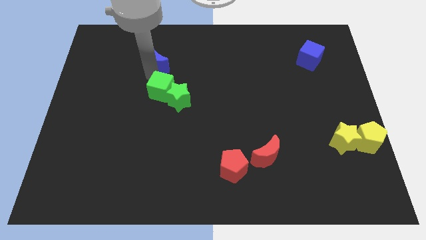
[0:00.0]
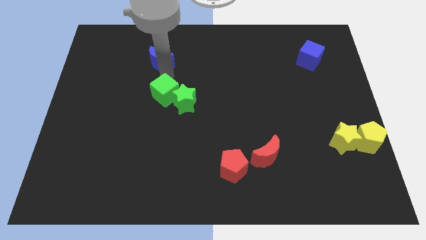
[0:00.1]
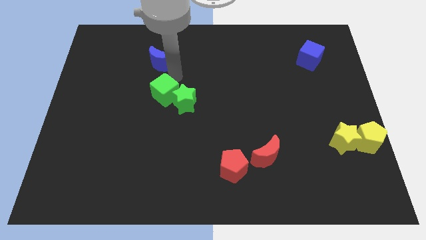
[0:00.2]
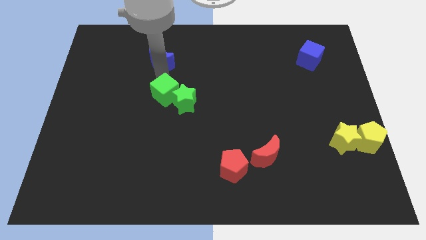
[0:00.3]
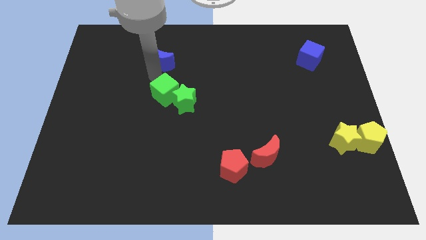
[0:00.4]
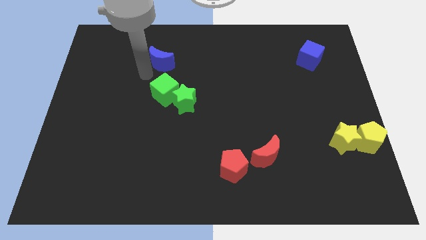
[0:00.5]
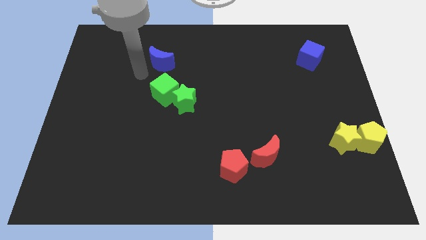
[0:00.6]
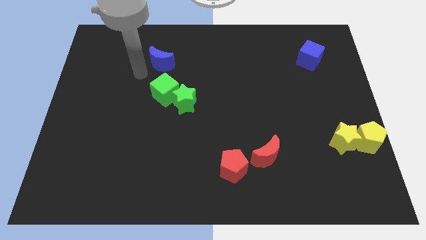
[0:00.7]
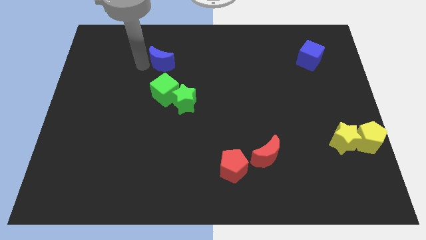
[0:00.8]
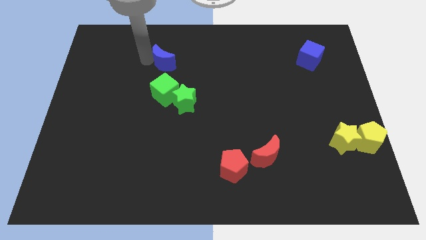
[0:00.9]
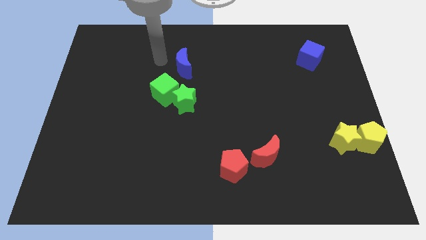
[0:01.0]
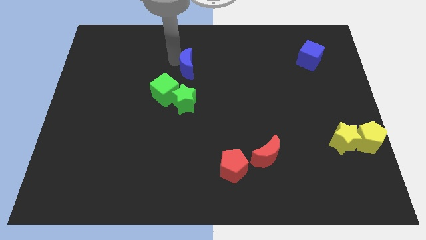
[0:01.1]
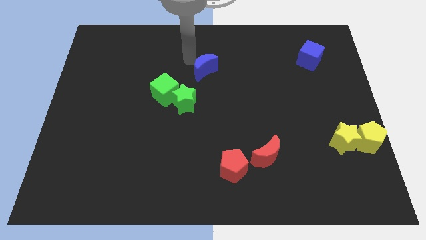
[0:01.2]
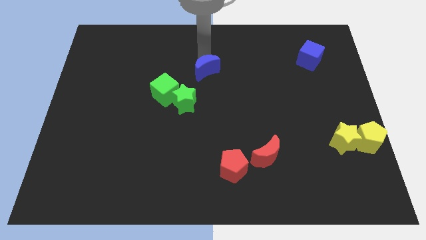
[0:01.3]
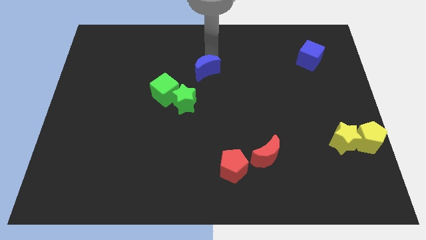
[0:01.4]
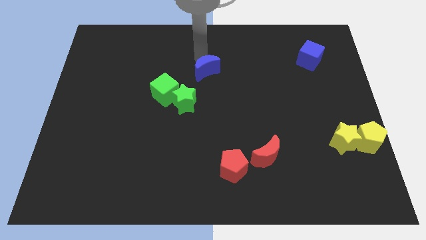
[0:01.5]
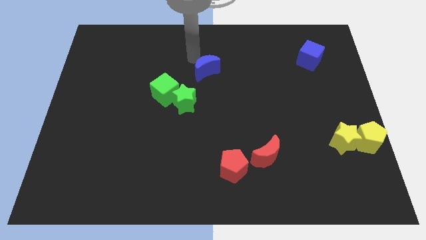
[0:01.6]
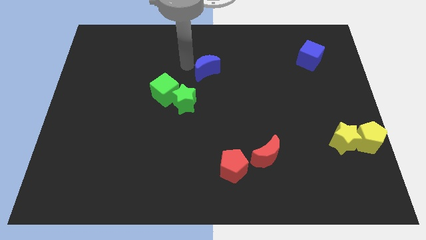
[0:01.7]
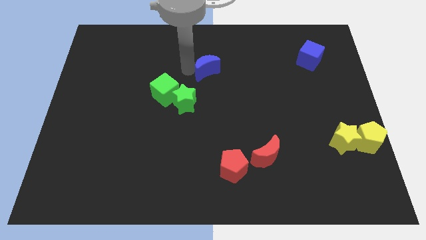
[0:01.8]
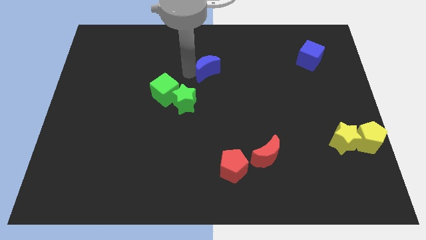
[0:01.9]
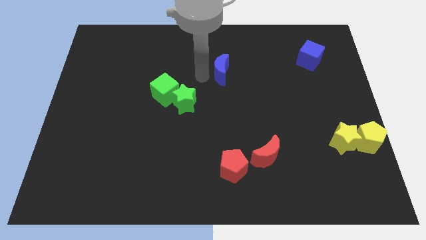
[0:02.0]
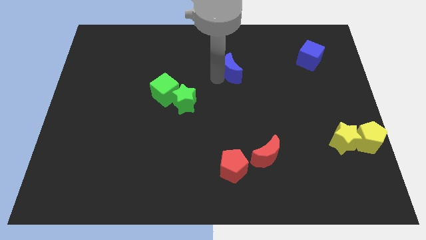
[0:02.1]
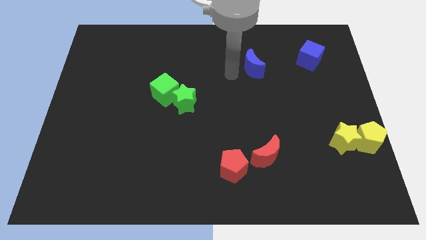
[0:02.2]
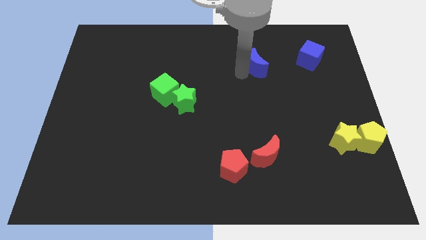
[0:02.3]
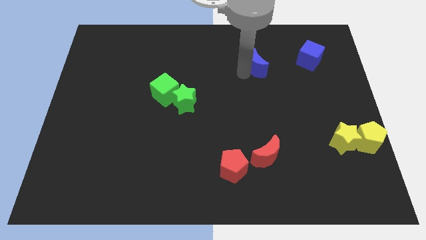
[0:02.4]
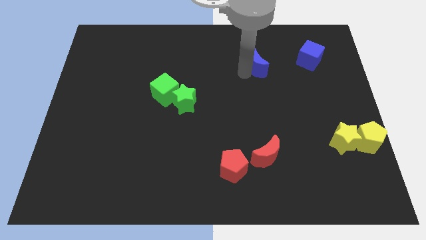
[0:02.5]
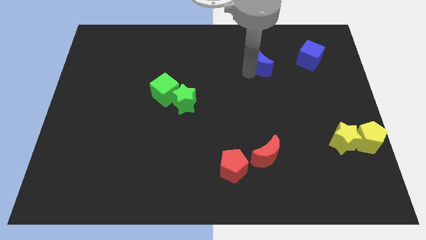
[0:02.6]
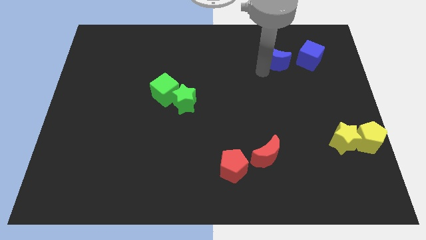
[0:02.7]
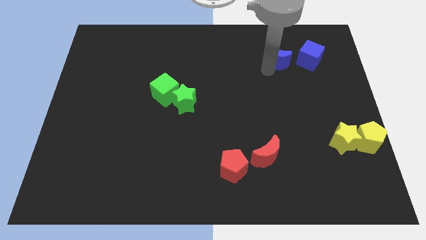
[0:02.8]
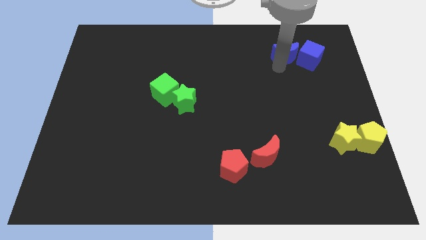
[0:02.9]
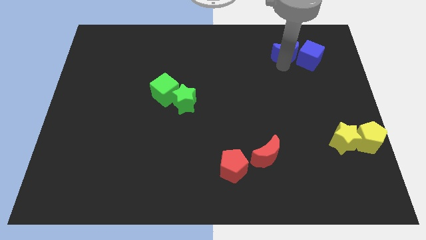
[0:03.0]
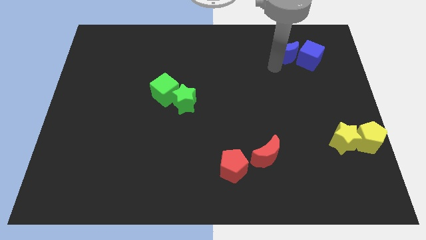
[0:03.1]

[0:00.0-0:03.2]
place the blue crescent to the left side of the blue cube

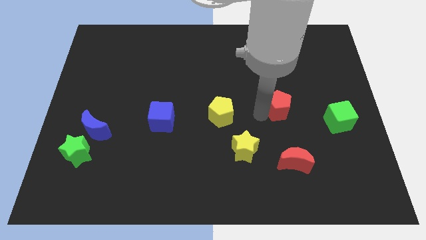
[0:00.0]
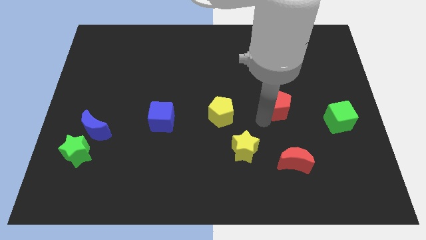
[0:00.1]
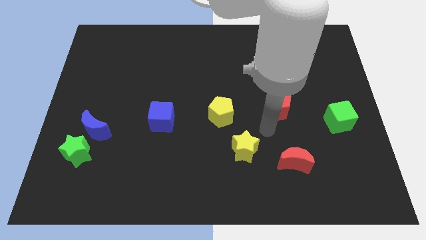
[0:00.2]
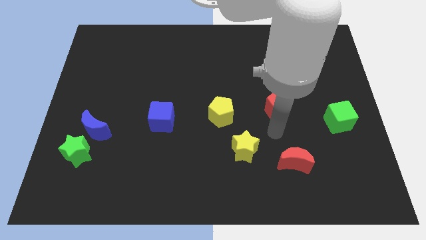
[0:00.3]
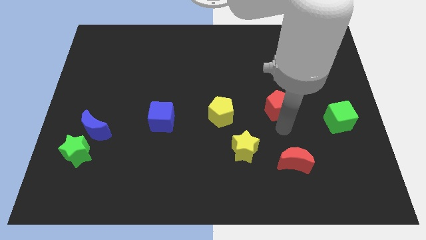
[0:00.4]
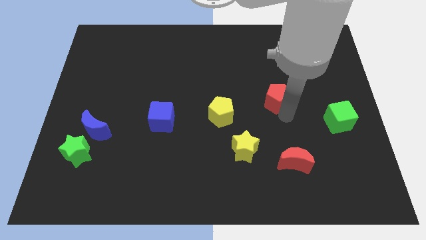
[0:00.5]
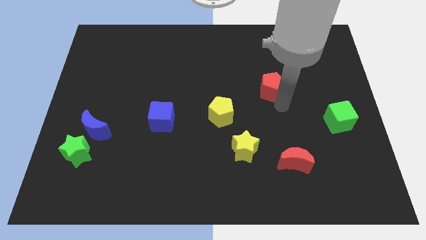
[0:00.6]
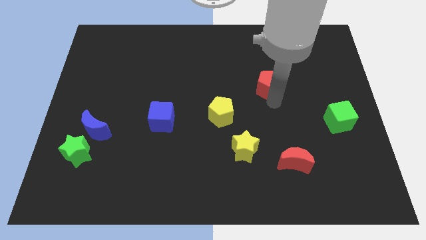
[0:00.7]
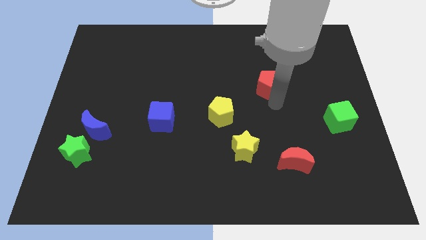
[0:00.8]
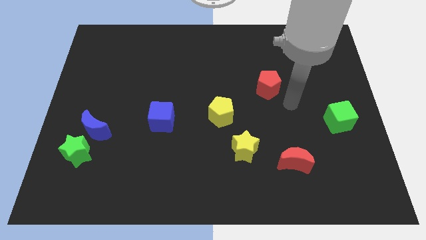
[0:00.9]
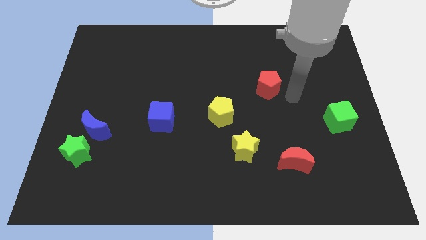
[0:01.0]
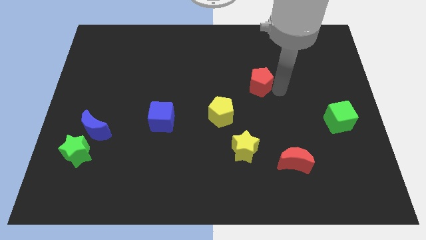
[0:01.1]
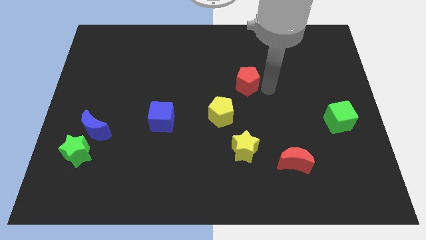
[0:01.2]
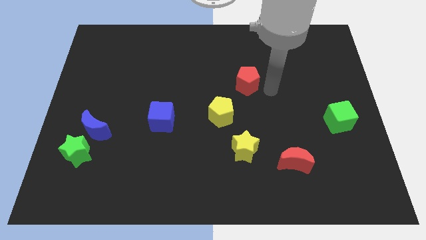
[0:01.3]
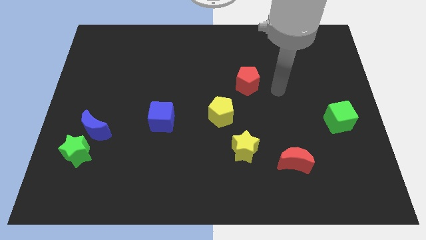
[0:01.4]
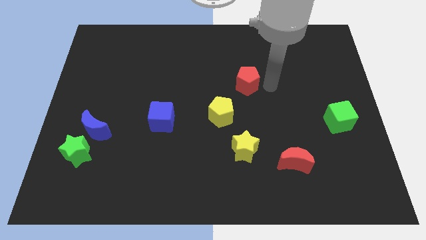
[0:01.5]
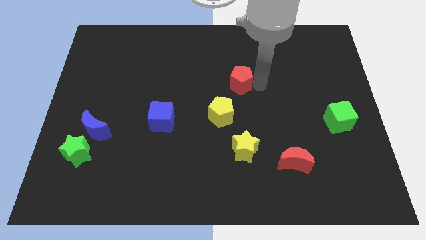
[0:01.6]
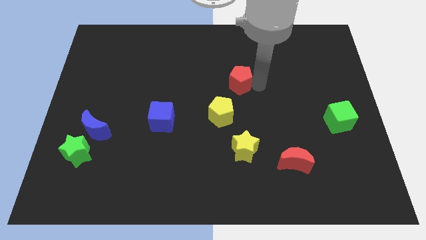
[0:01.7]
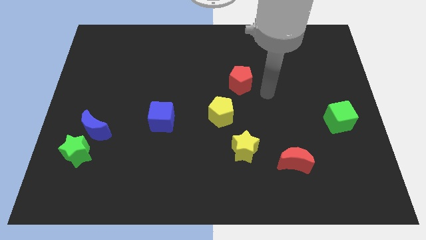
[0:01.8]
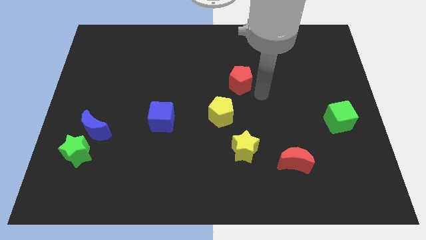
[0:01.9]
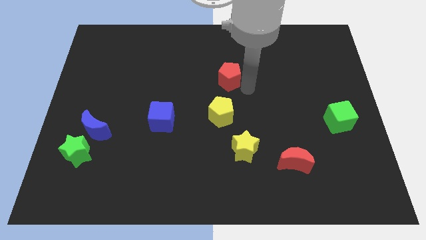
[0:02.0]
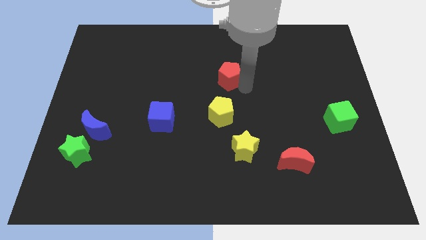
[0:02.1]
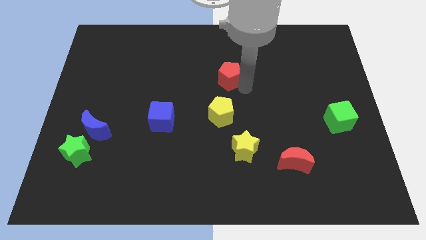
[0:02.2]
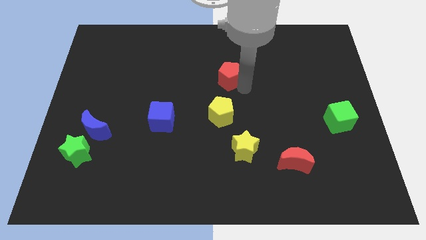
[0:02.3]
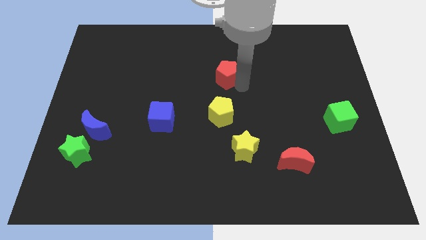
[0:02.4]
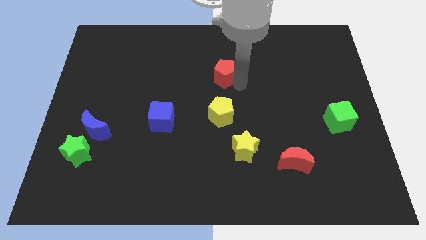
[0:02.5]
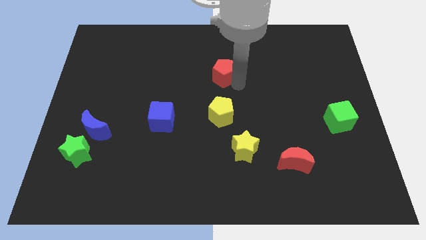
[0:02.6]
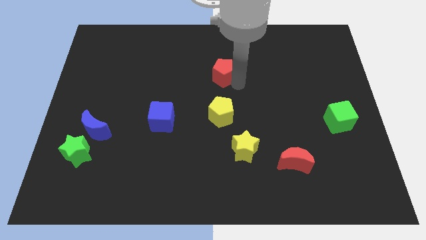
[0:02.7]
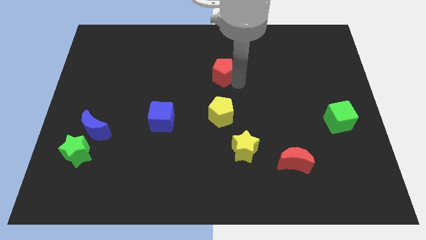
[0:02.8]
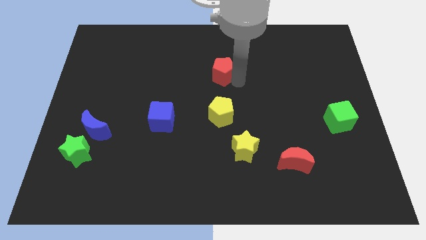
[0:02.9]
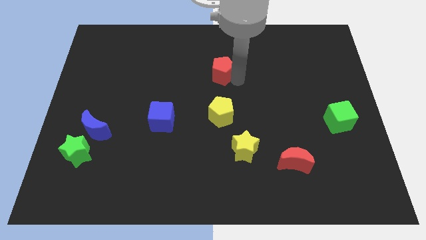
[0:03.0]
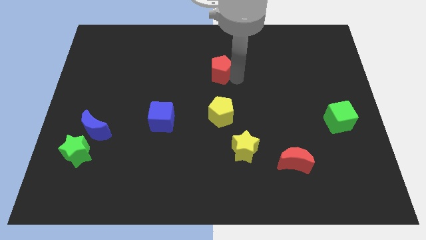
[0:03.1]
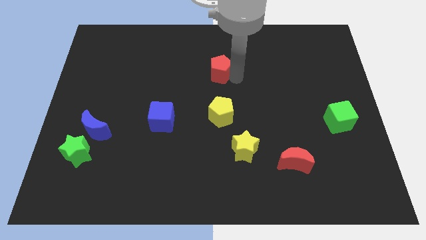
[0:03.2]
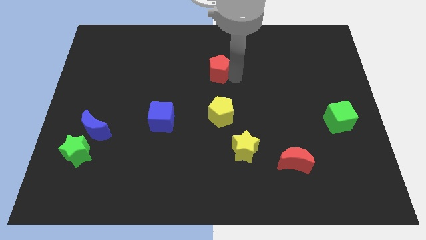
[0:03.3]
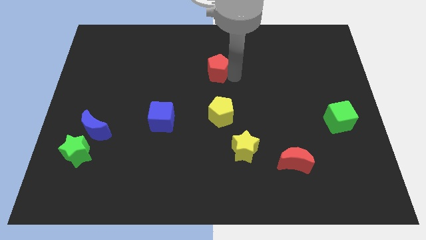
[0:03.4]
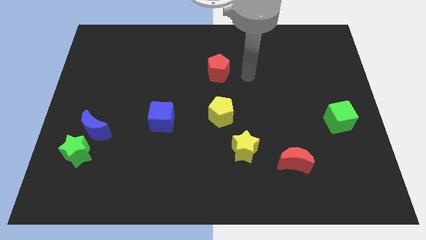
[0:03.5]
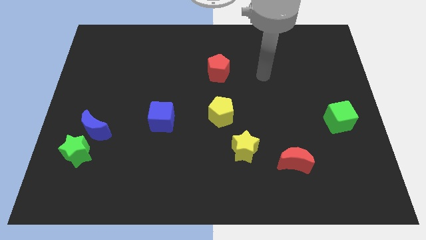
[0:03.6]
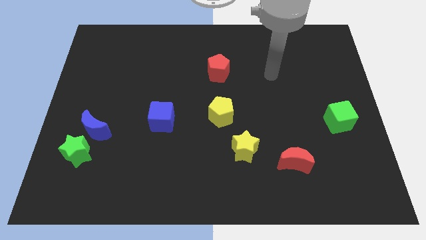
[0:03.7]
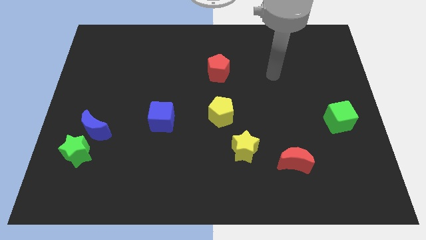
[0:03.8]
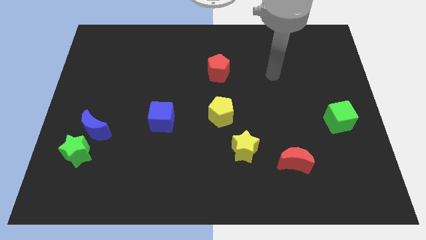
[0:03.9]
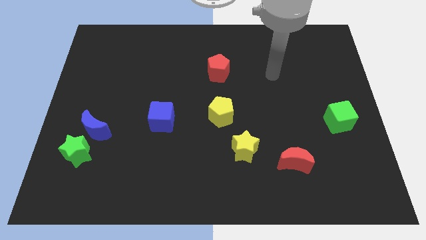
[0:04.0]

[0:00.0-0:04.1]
place the red pentagon above the yellow pentagon

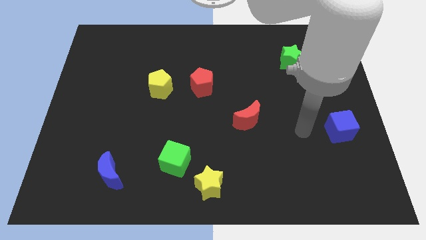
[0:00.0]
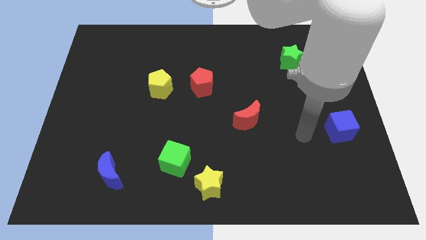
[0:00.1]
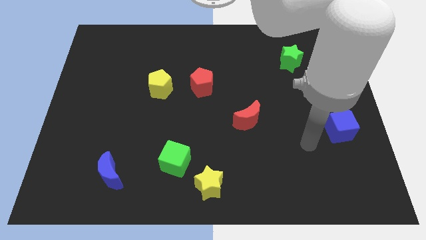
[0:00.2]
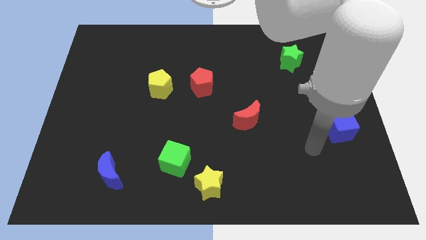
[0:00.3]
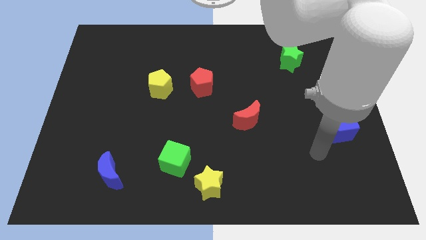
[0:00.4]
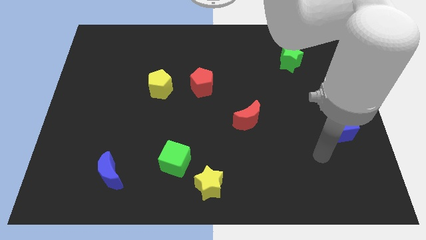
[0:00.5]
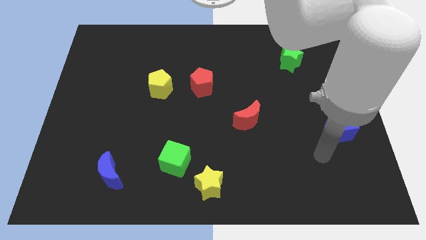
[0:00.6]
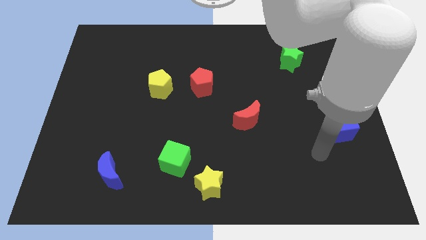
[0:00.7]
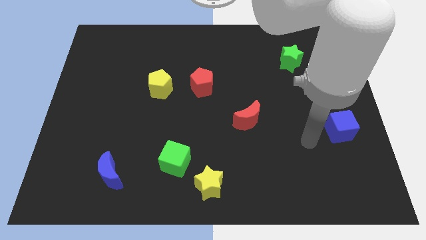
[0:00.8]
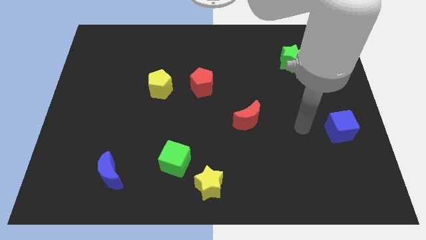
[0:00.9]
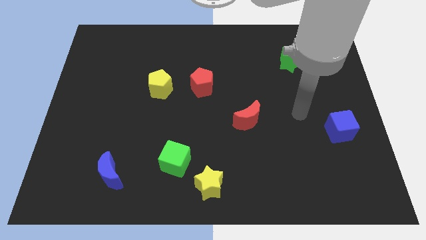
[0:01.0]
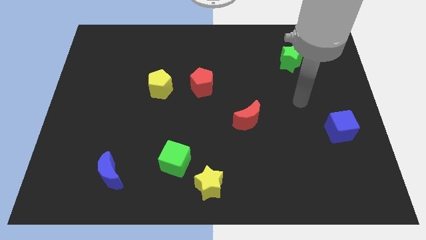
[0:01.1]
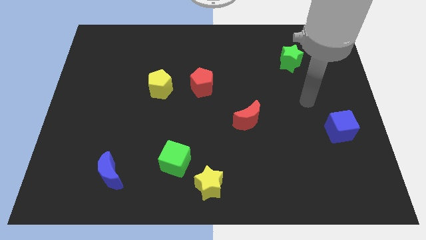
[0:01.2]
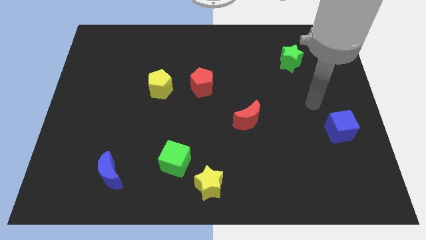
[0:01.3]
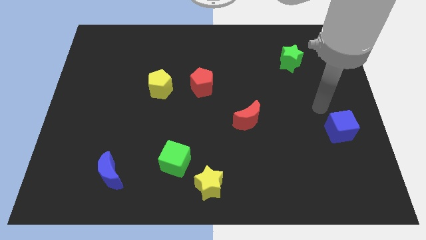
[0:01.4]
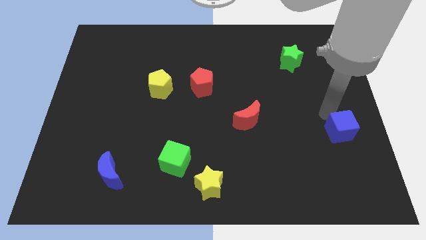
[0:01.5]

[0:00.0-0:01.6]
move the arm to the top of the blue cube

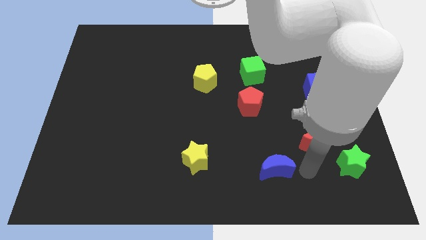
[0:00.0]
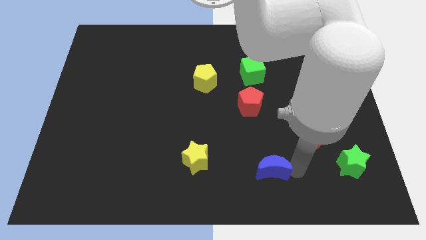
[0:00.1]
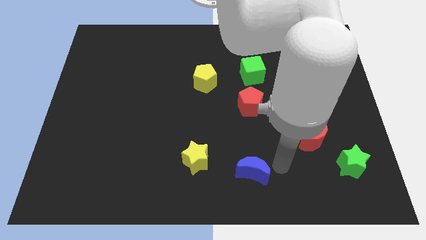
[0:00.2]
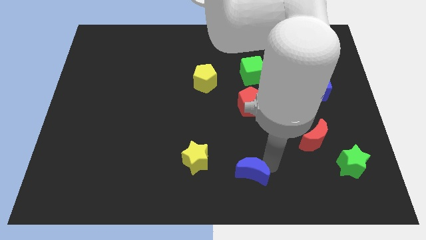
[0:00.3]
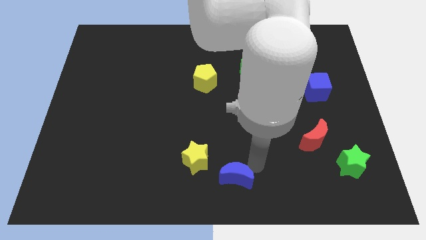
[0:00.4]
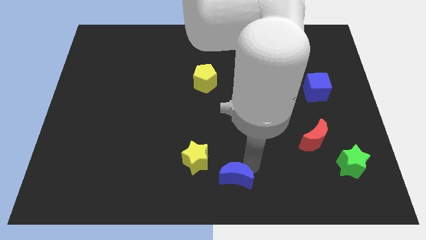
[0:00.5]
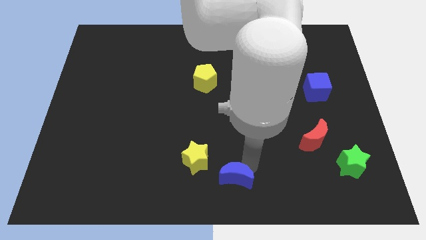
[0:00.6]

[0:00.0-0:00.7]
move the blue crescent to the right of the board
